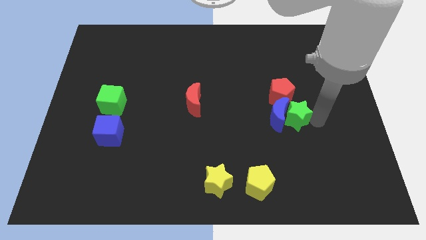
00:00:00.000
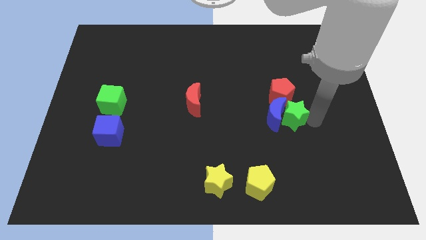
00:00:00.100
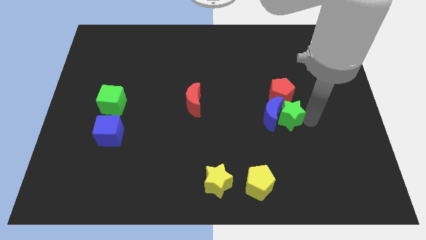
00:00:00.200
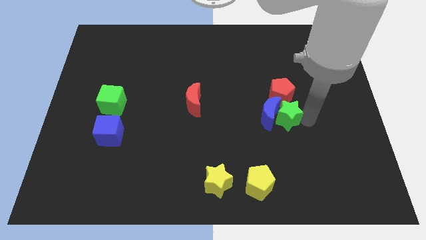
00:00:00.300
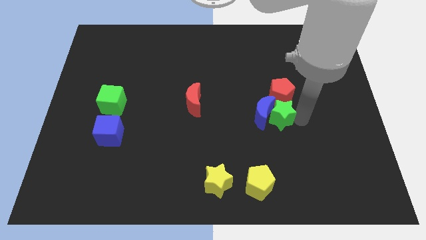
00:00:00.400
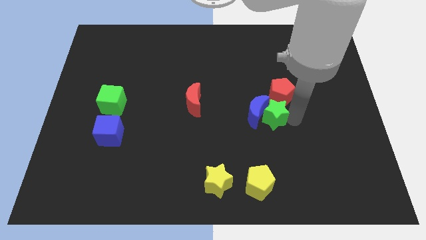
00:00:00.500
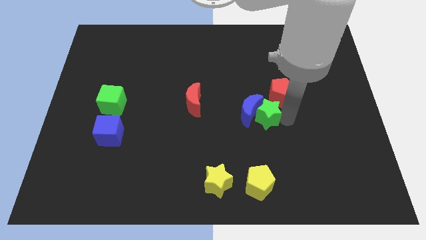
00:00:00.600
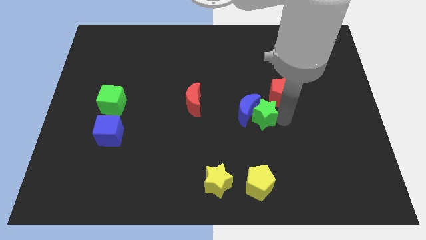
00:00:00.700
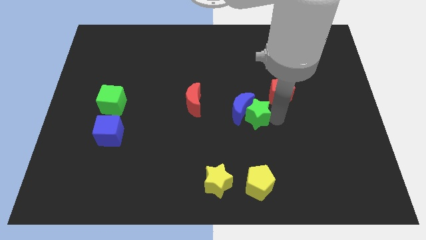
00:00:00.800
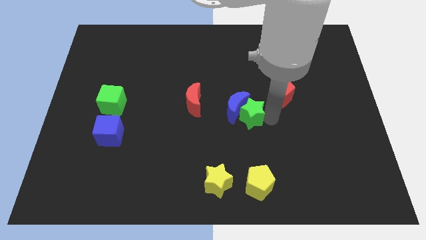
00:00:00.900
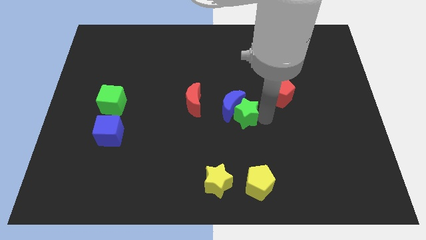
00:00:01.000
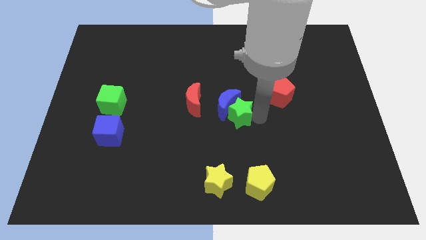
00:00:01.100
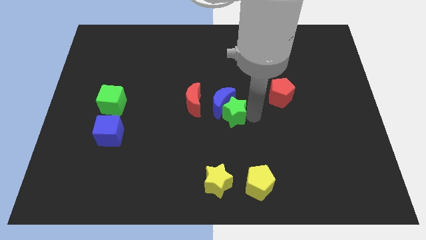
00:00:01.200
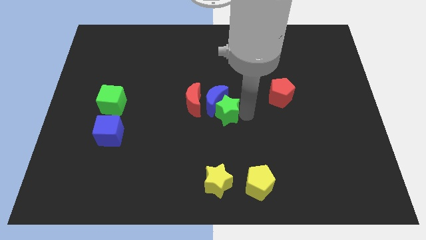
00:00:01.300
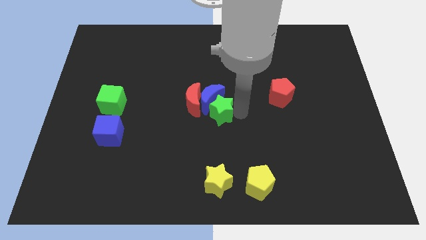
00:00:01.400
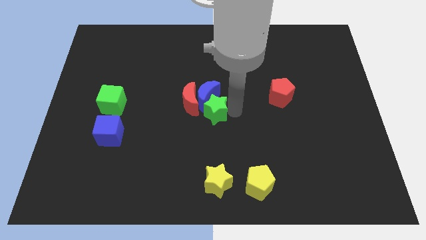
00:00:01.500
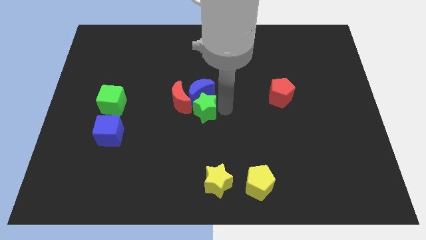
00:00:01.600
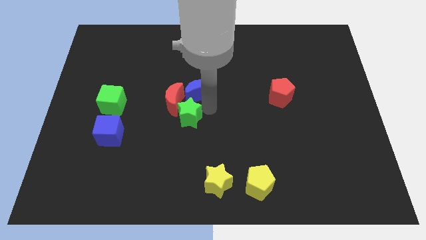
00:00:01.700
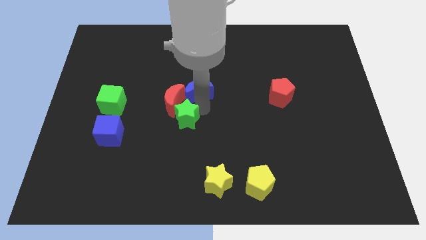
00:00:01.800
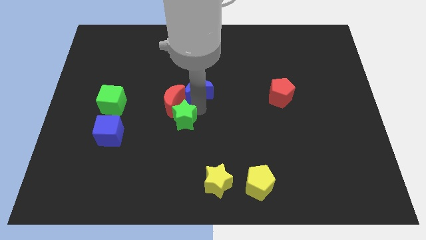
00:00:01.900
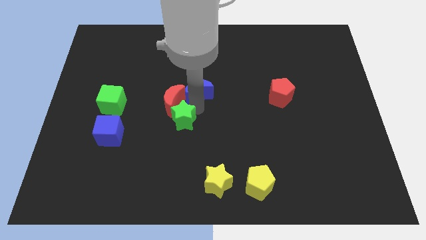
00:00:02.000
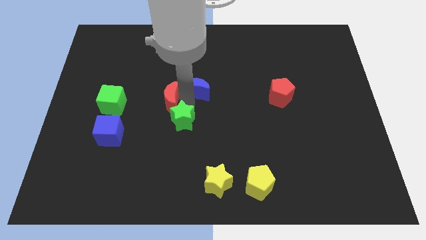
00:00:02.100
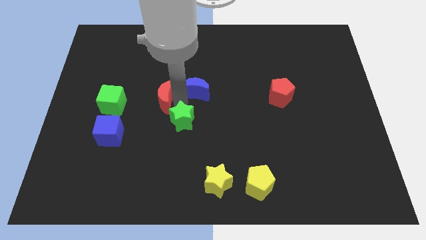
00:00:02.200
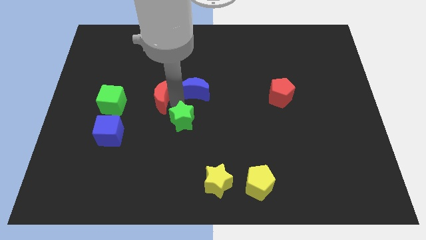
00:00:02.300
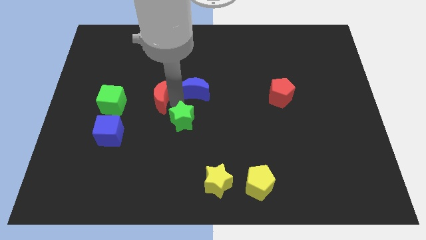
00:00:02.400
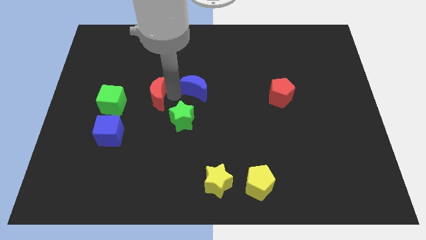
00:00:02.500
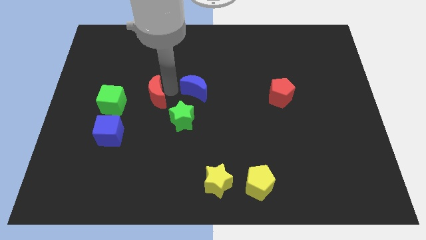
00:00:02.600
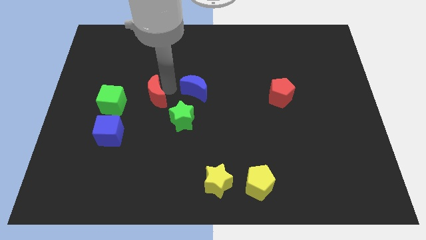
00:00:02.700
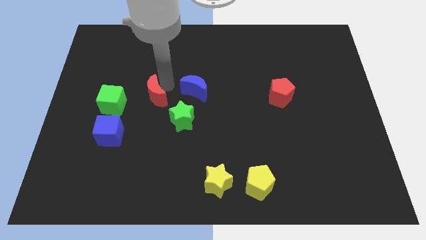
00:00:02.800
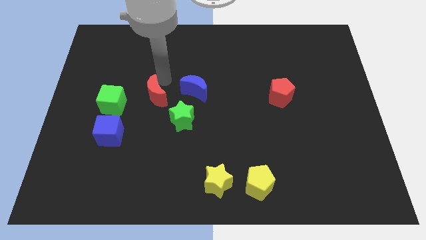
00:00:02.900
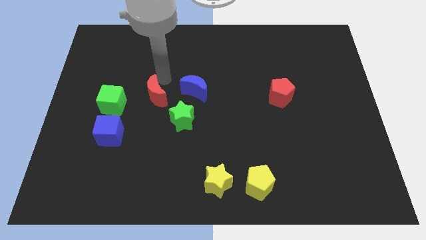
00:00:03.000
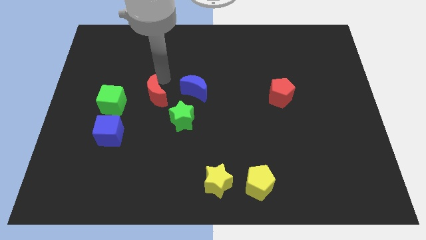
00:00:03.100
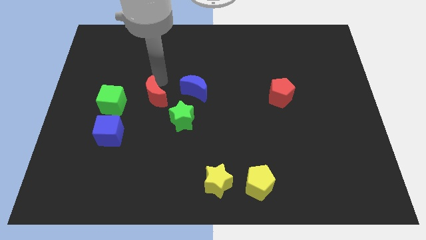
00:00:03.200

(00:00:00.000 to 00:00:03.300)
make a triangle out of green star blue and the red moon

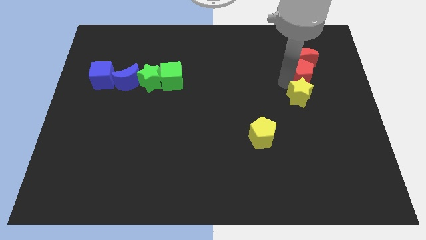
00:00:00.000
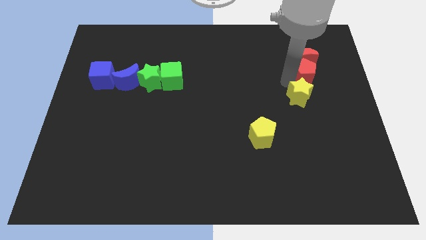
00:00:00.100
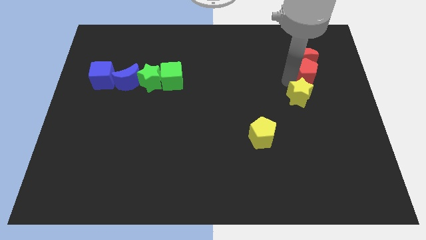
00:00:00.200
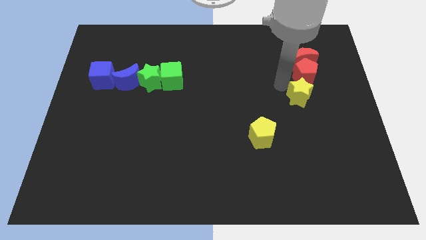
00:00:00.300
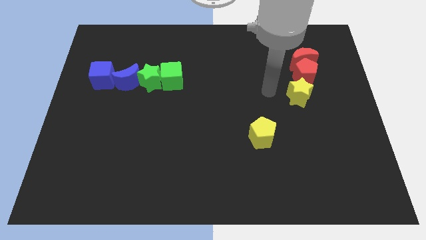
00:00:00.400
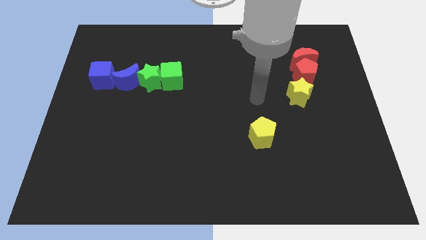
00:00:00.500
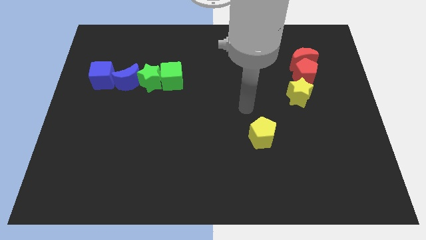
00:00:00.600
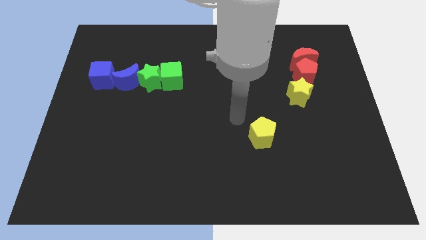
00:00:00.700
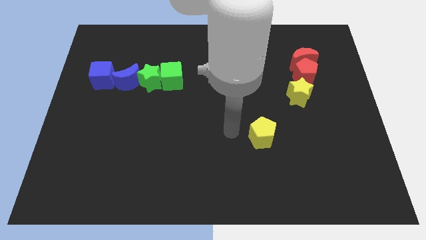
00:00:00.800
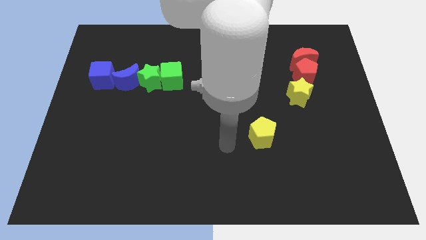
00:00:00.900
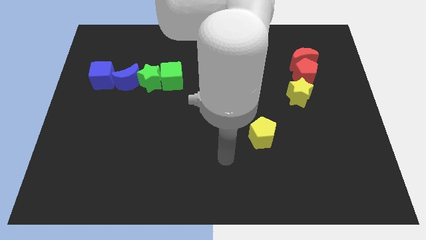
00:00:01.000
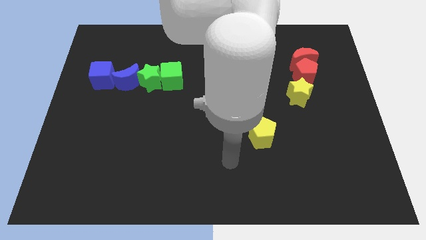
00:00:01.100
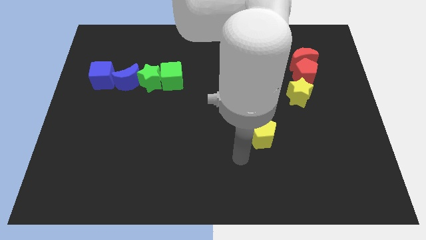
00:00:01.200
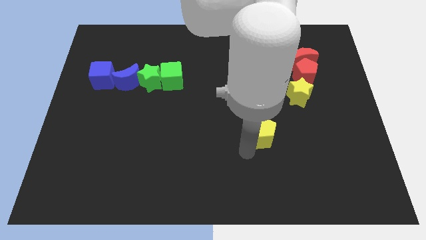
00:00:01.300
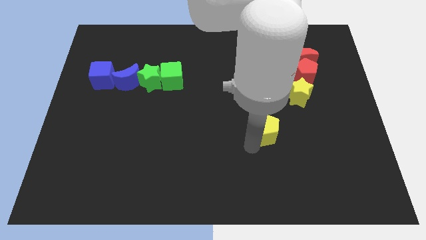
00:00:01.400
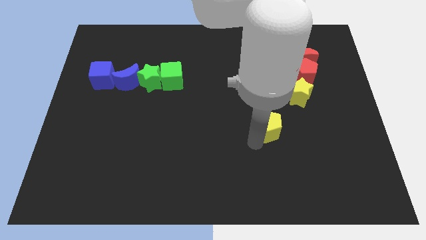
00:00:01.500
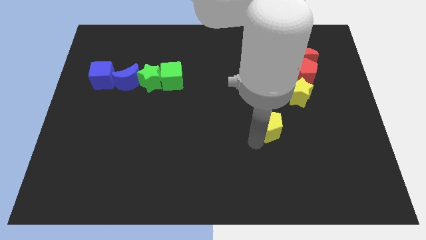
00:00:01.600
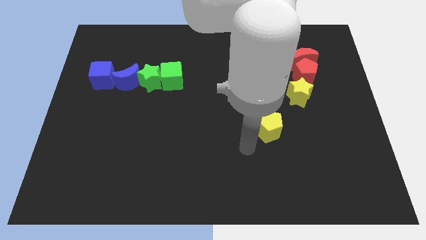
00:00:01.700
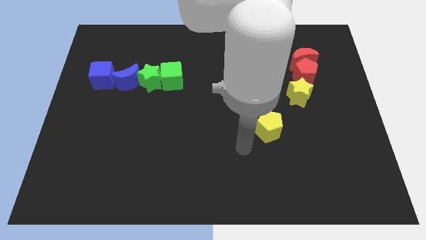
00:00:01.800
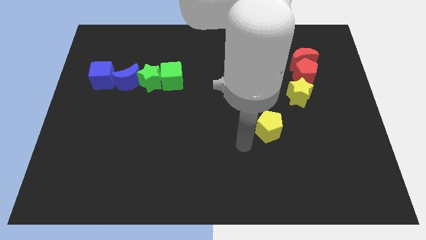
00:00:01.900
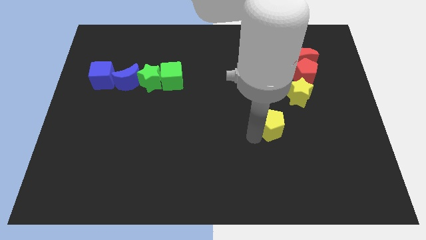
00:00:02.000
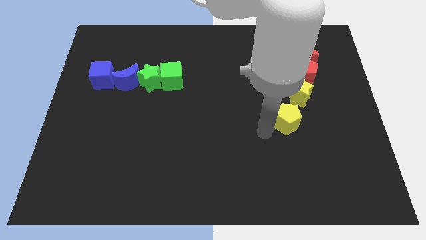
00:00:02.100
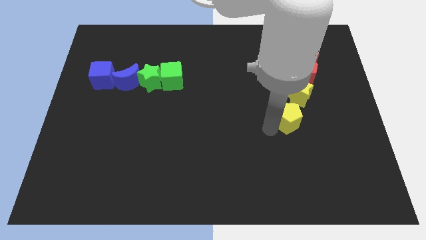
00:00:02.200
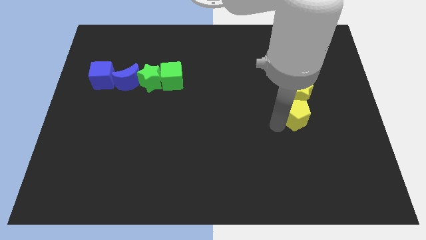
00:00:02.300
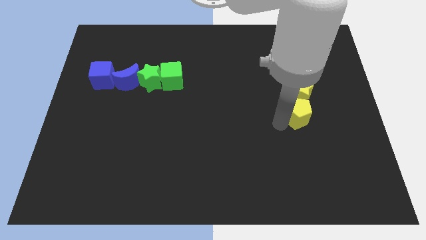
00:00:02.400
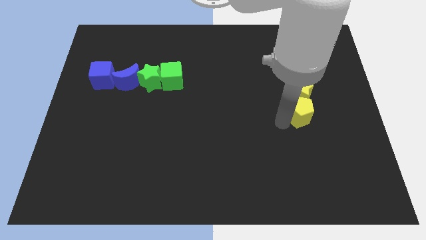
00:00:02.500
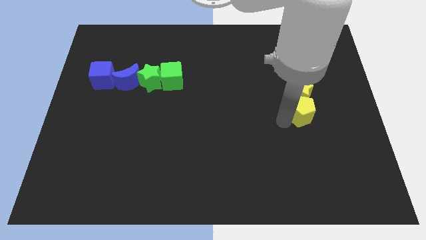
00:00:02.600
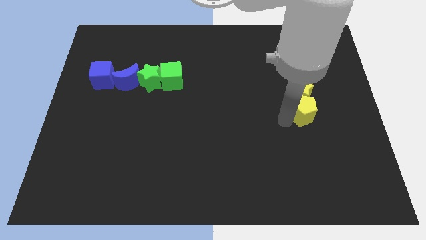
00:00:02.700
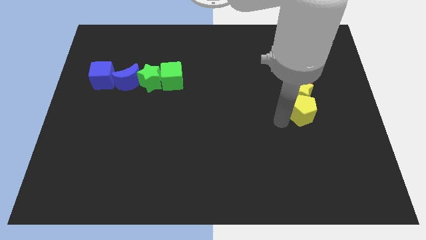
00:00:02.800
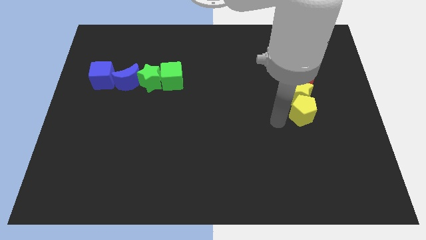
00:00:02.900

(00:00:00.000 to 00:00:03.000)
place yellow pentagon to the bottom of yellow star

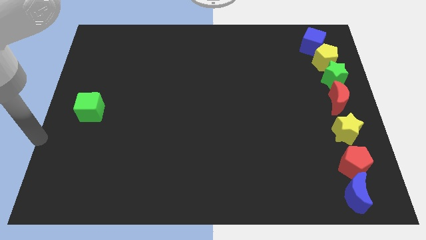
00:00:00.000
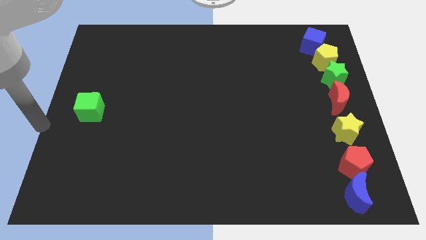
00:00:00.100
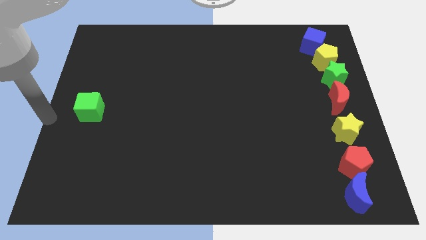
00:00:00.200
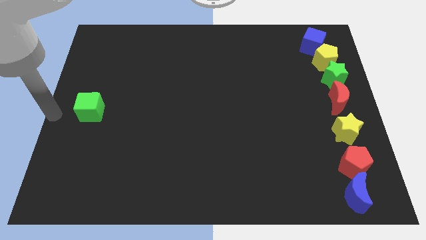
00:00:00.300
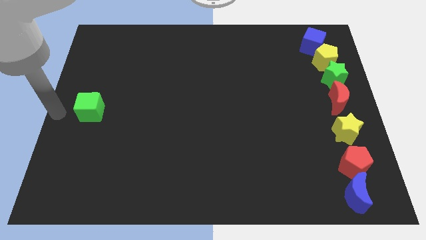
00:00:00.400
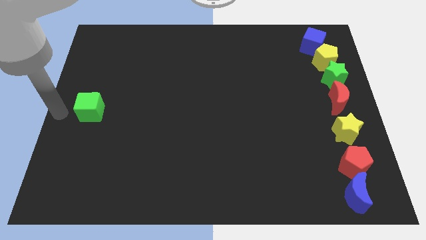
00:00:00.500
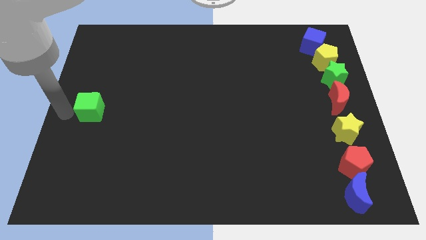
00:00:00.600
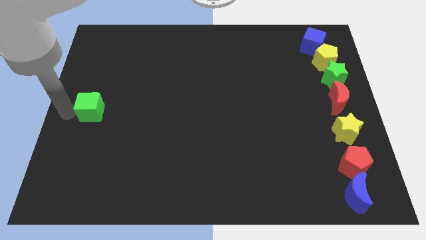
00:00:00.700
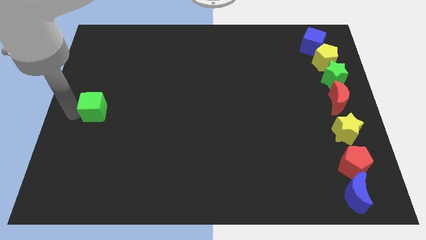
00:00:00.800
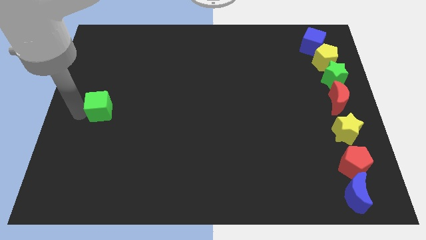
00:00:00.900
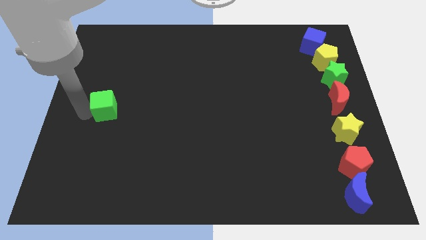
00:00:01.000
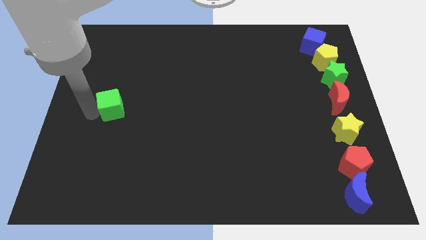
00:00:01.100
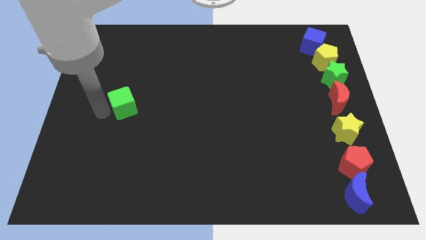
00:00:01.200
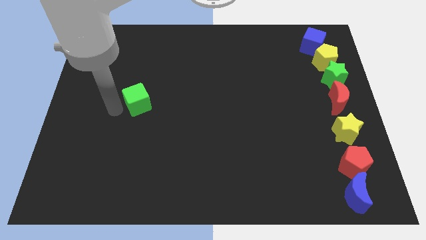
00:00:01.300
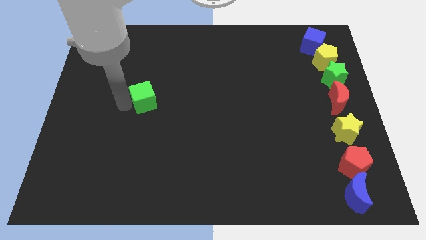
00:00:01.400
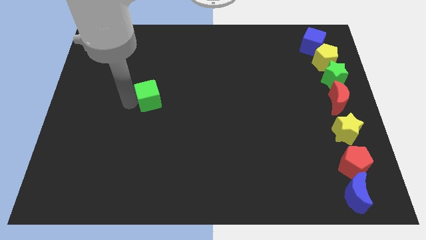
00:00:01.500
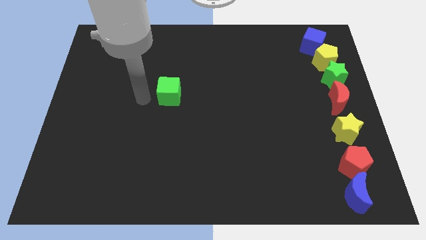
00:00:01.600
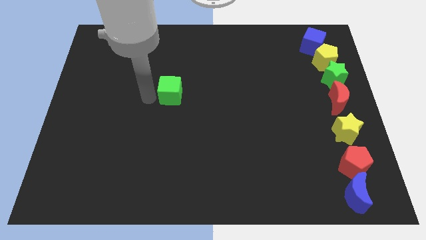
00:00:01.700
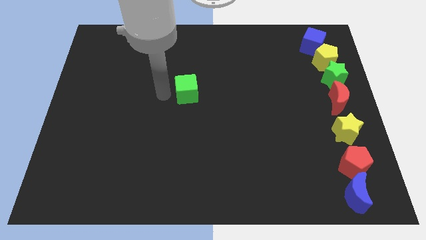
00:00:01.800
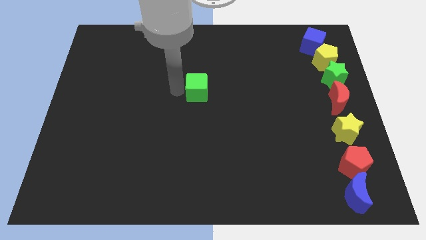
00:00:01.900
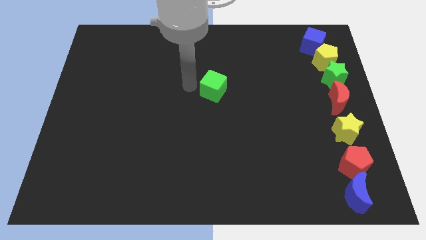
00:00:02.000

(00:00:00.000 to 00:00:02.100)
push the green cube towards the right

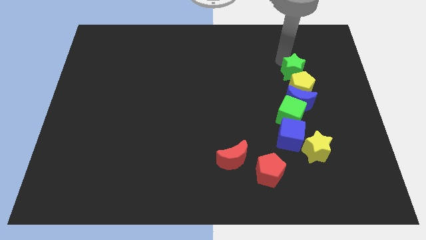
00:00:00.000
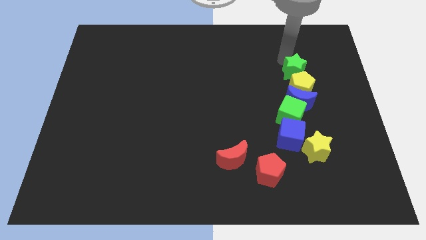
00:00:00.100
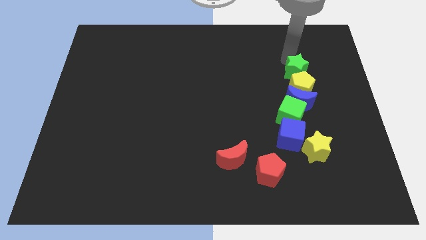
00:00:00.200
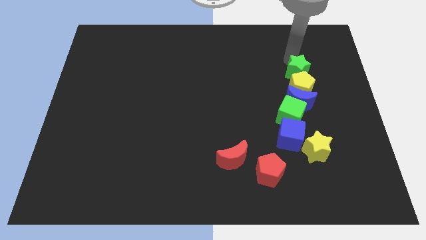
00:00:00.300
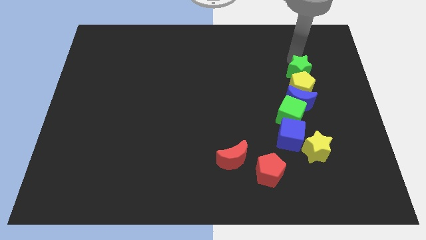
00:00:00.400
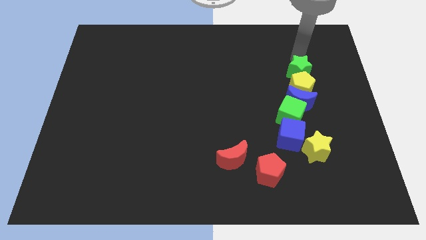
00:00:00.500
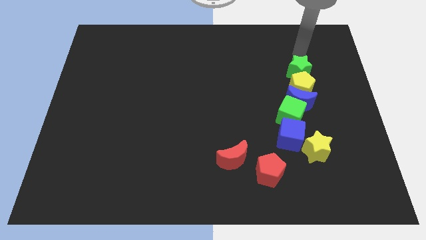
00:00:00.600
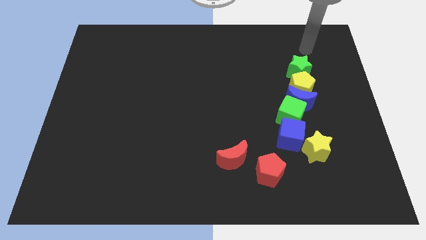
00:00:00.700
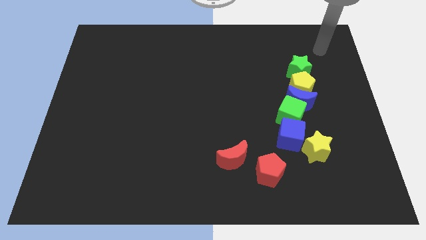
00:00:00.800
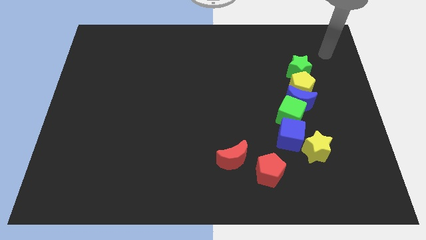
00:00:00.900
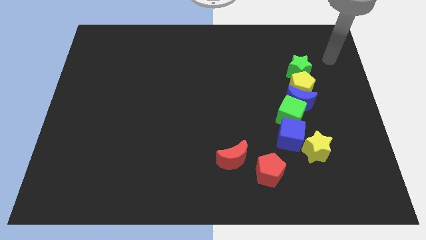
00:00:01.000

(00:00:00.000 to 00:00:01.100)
place green star above yellow pentagon
